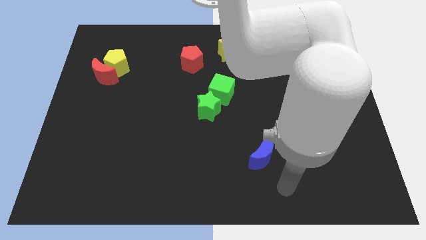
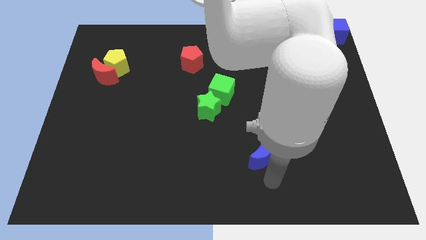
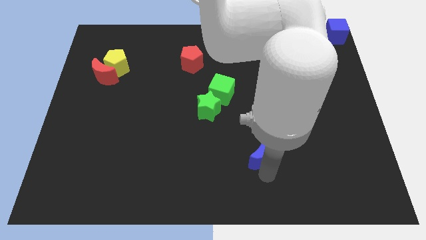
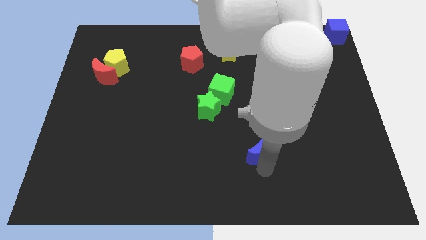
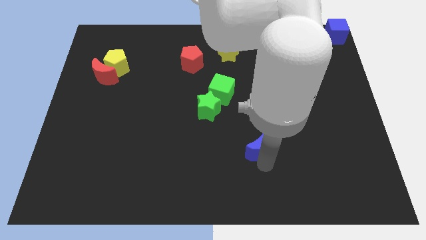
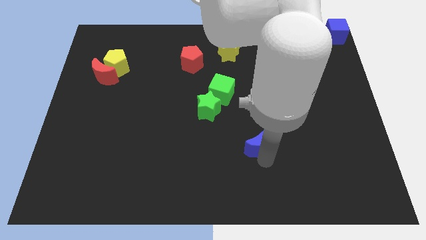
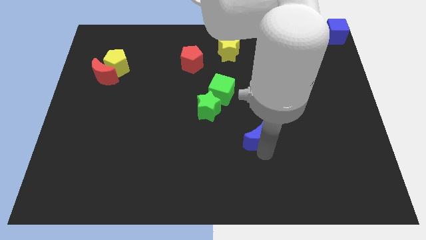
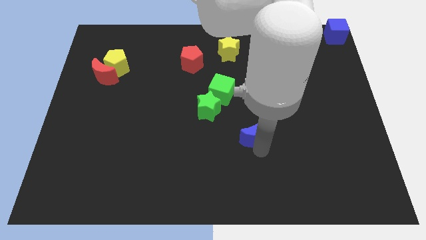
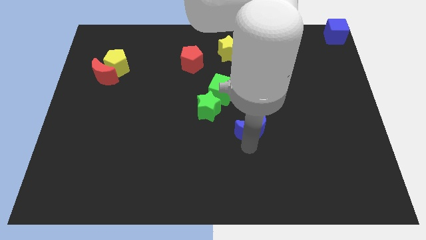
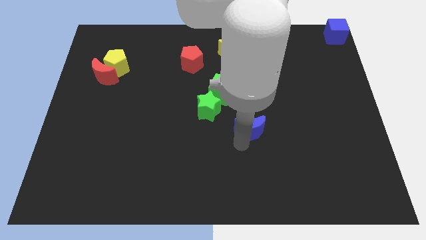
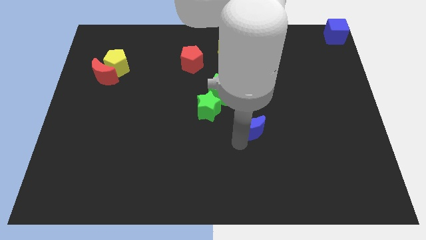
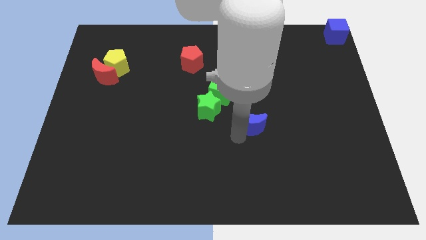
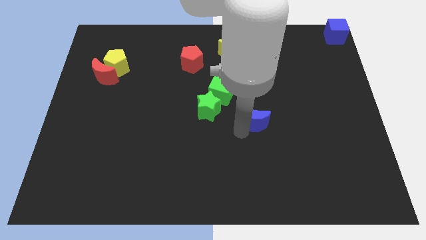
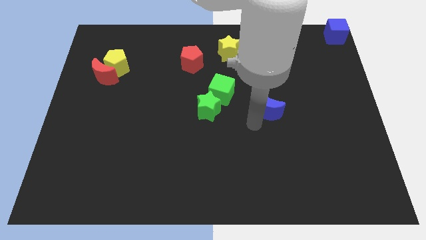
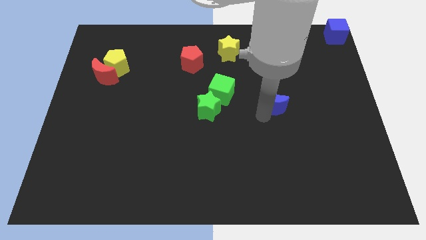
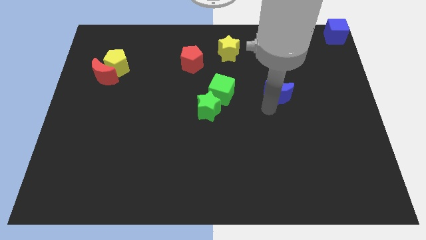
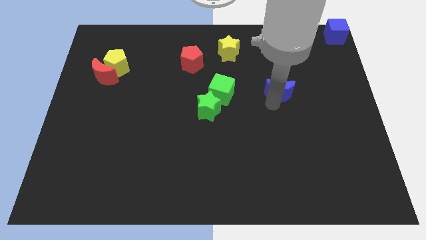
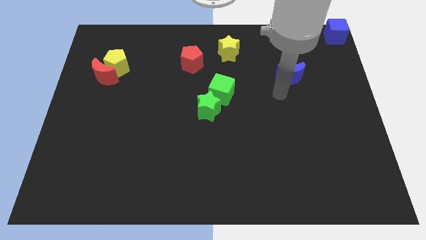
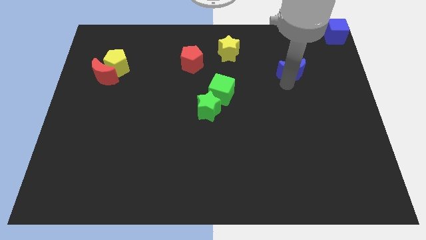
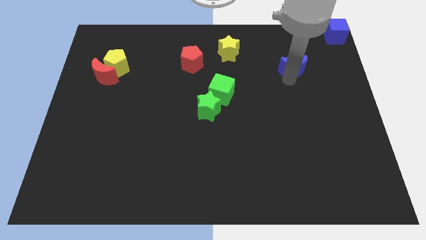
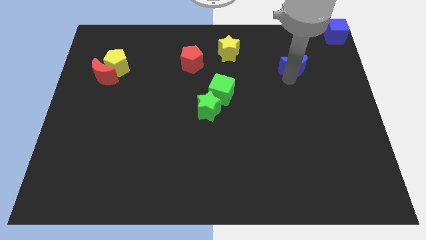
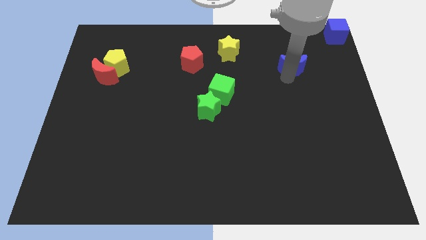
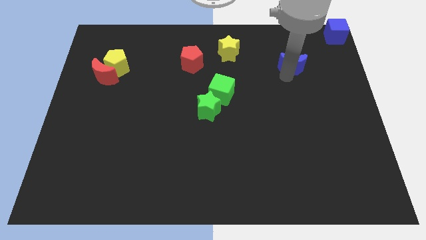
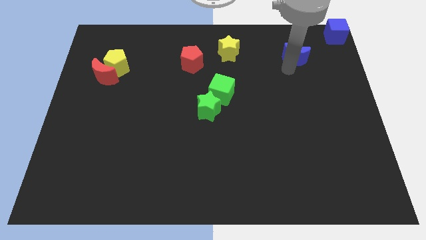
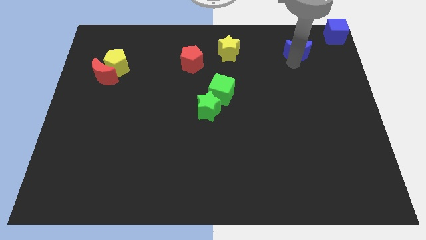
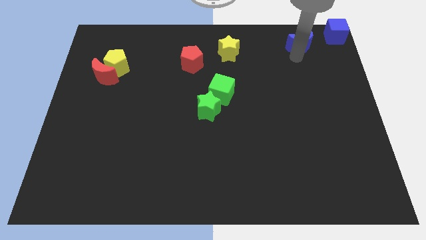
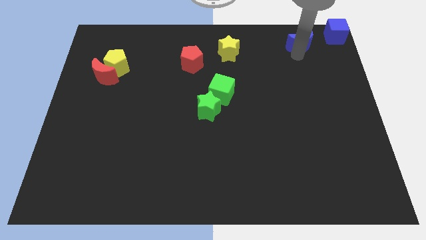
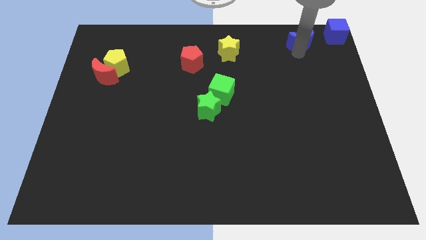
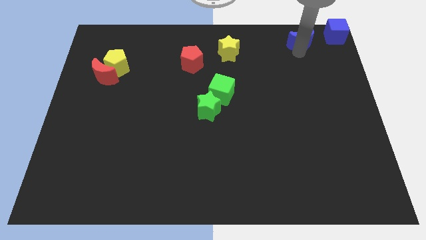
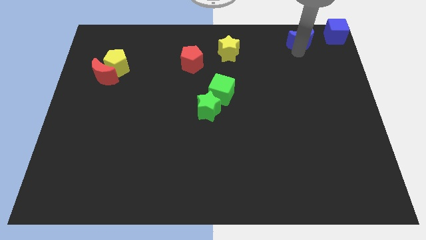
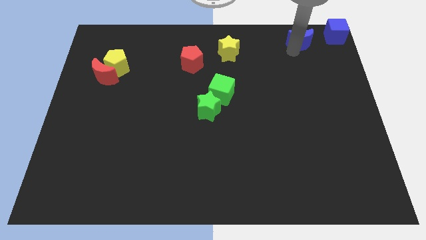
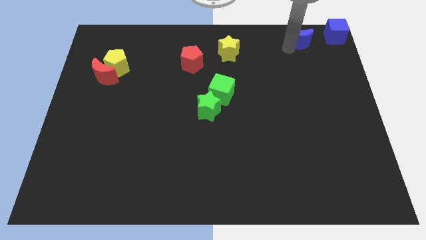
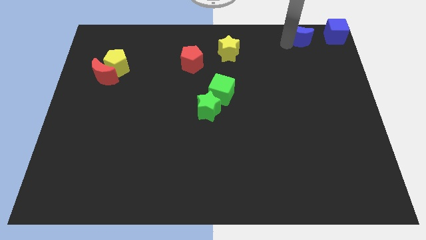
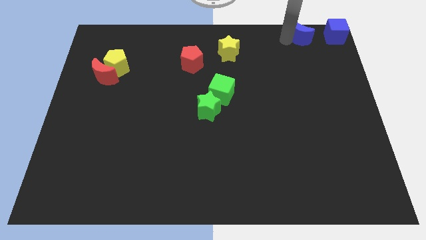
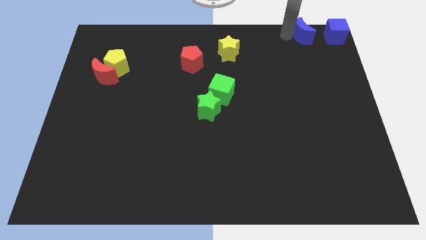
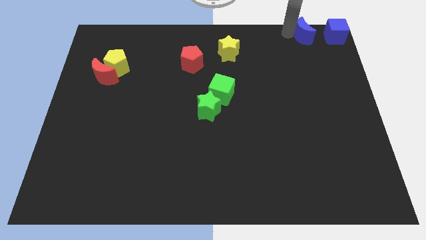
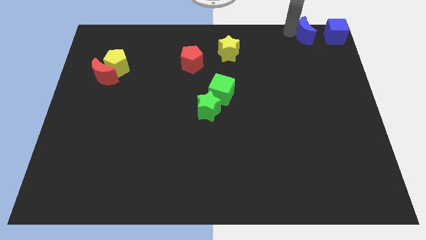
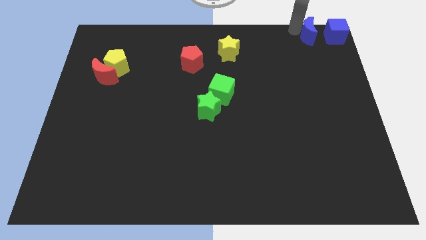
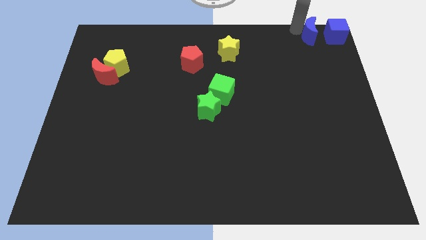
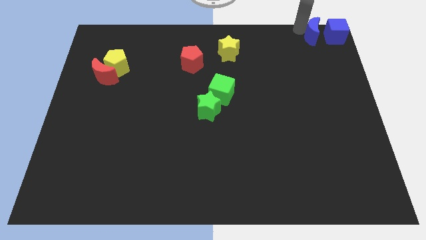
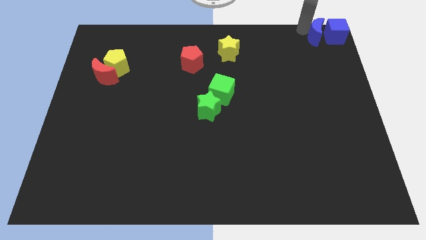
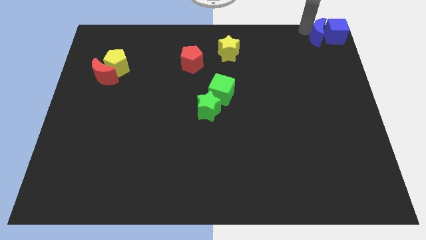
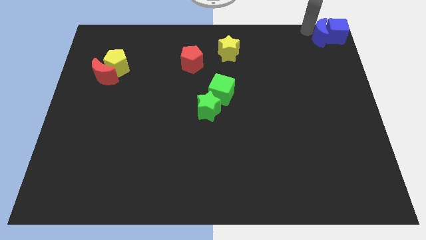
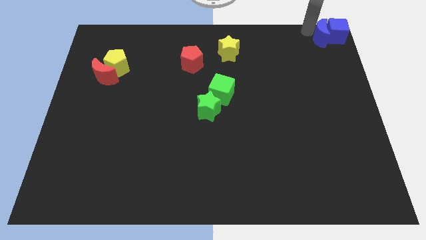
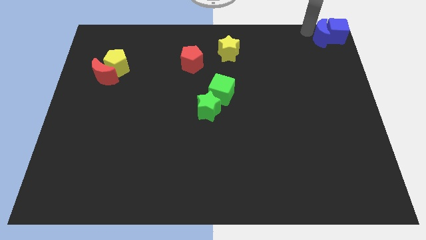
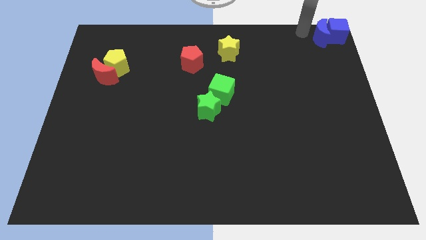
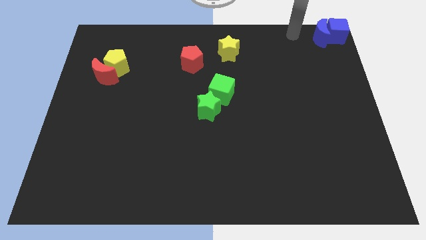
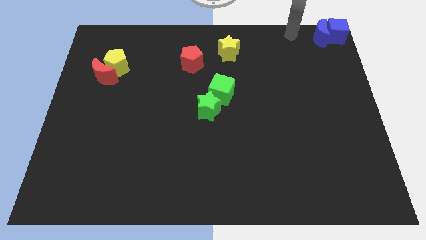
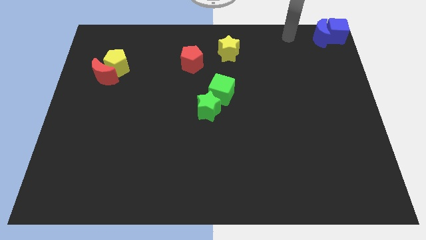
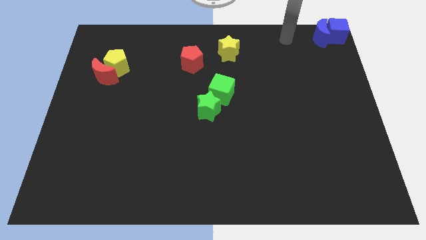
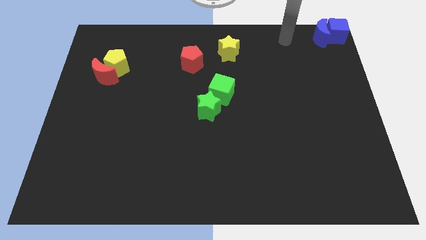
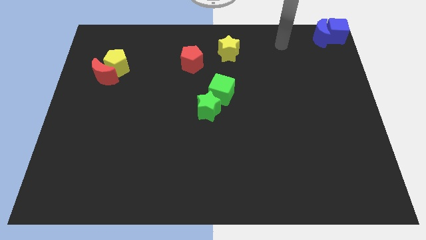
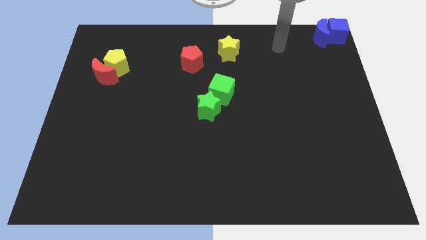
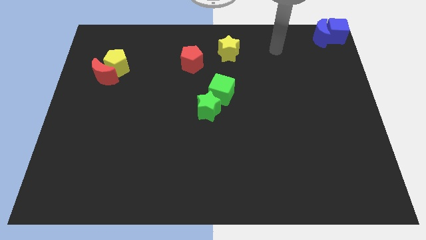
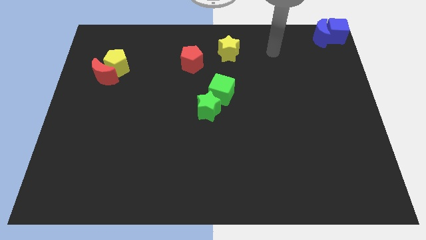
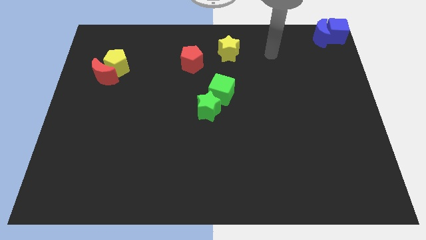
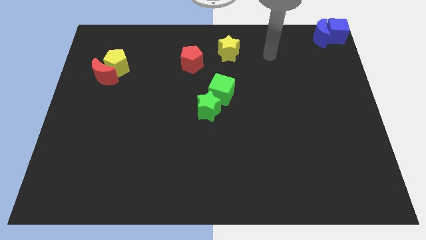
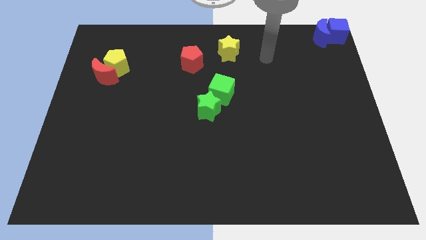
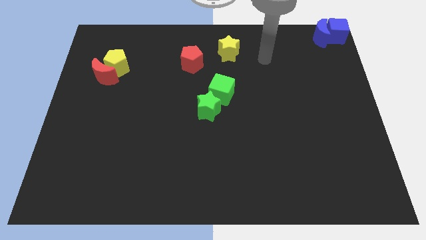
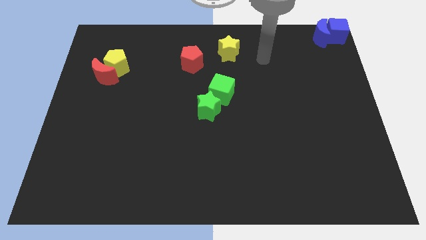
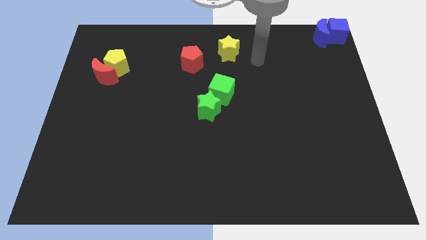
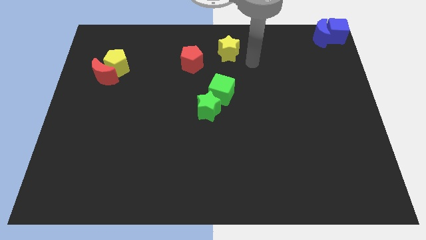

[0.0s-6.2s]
place blue crescent into the blue cube

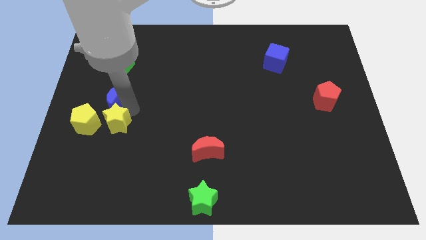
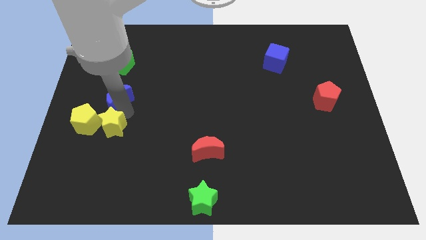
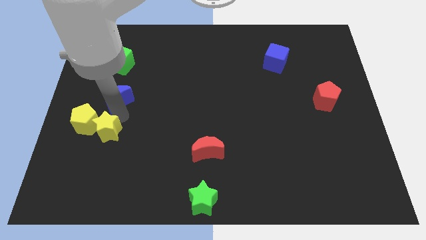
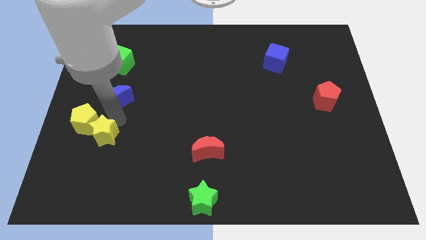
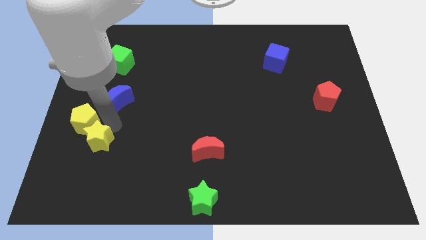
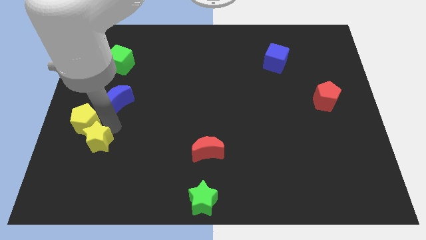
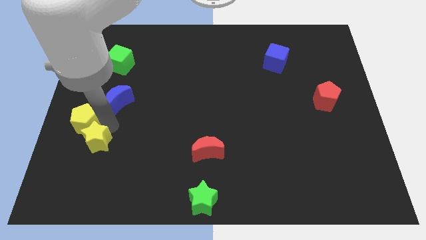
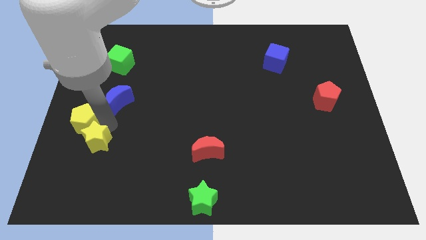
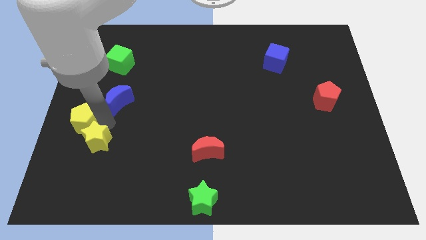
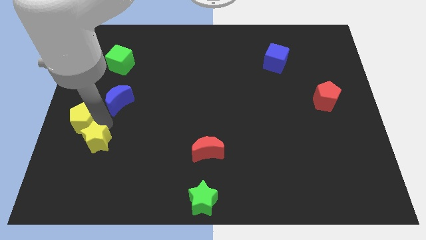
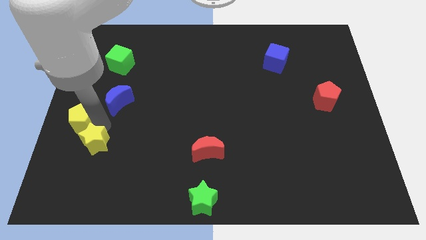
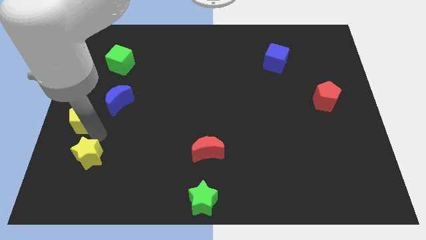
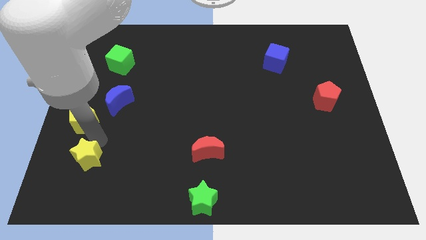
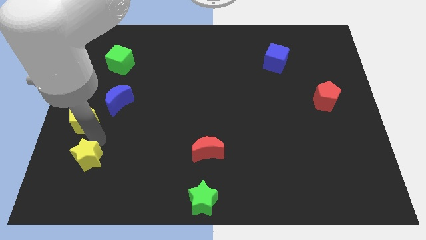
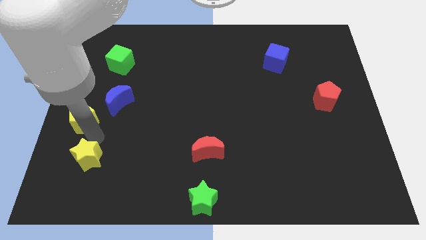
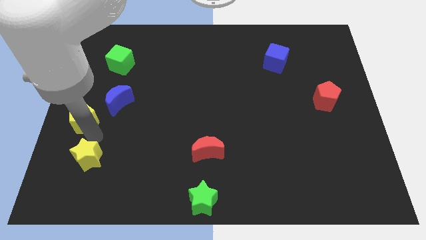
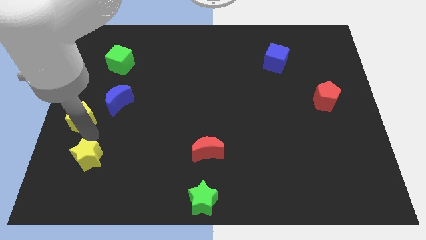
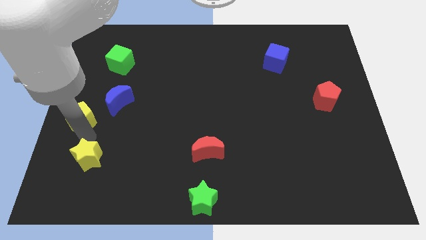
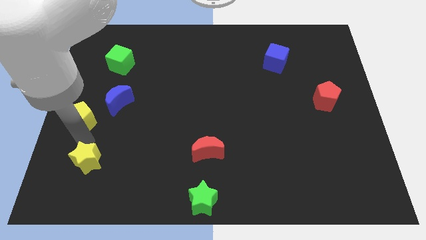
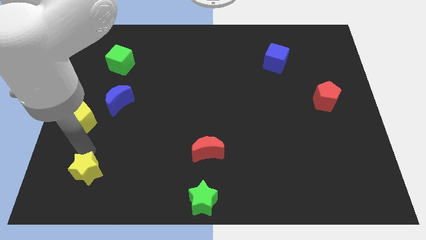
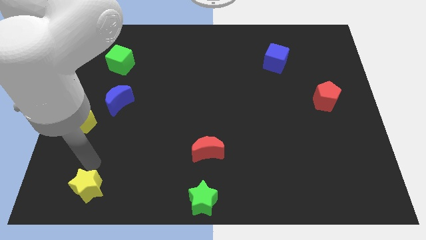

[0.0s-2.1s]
place the yellow star below the yellow pentagon

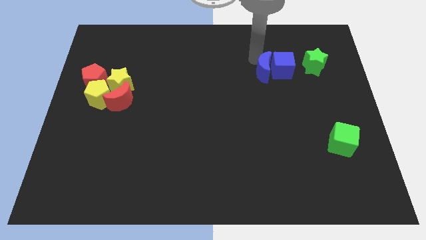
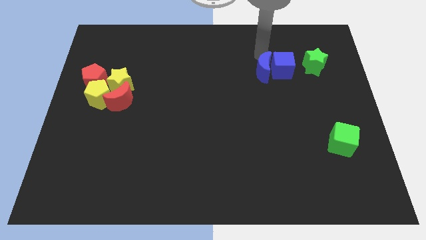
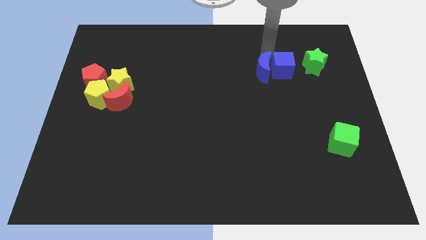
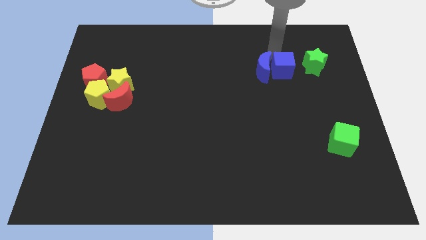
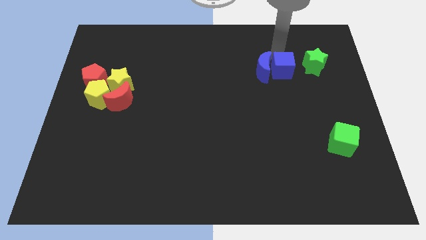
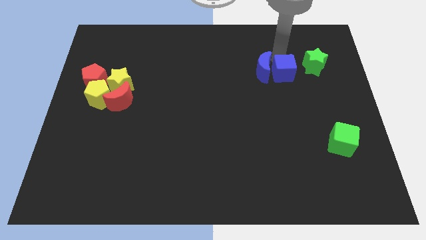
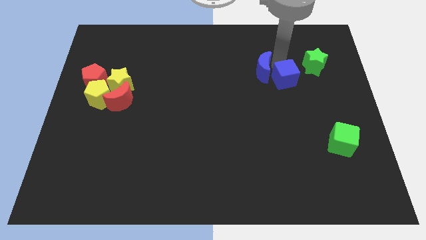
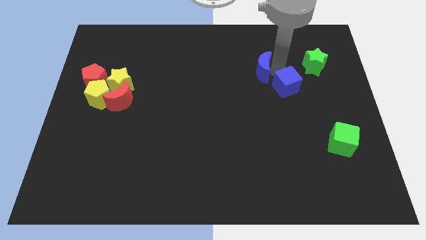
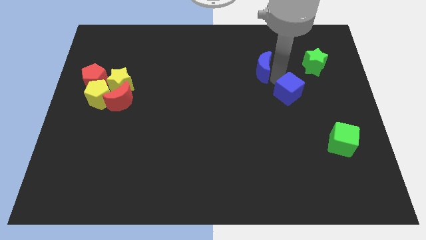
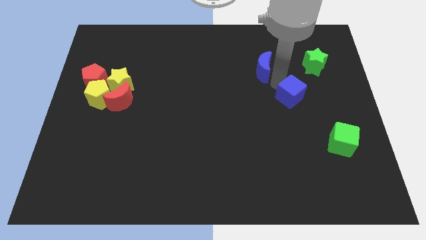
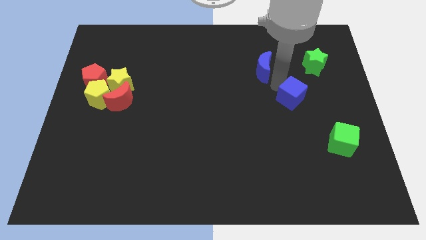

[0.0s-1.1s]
separate blue cube from blue moon
